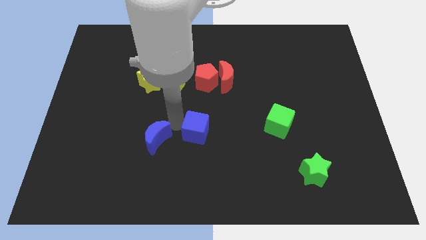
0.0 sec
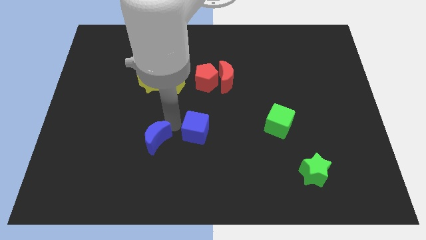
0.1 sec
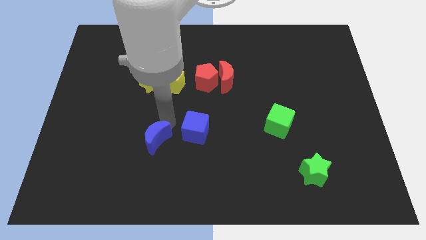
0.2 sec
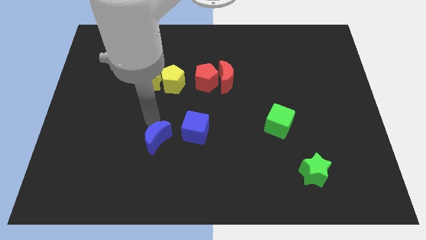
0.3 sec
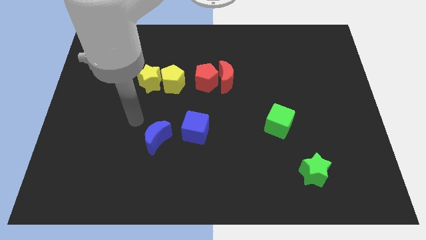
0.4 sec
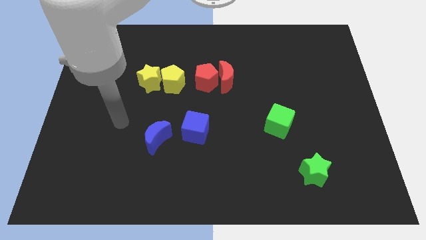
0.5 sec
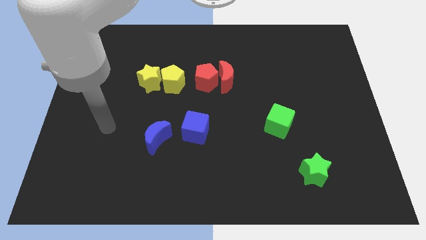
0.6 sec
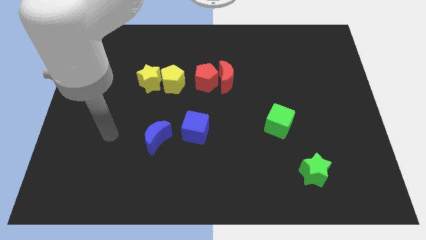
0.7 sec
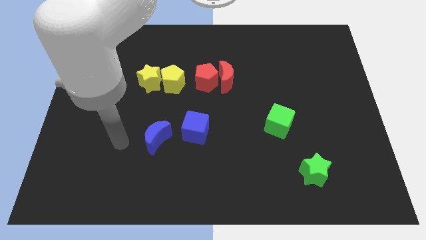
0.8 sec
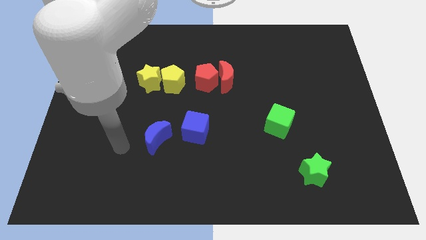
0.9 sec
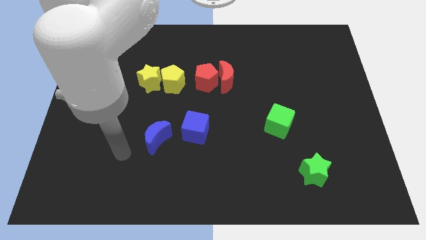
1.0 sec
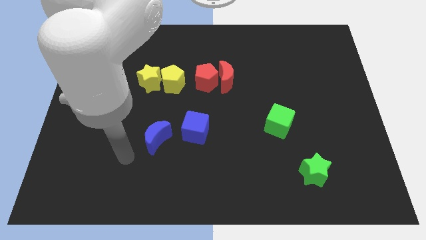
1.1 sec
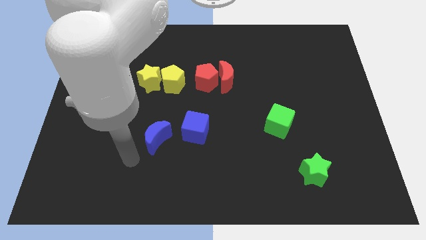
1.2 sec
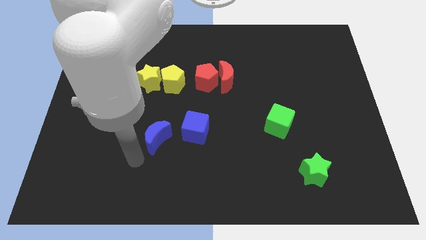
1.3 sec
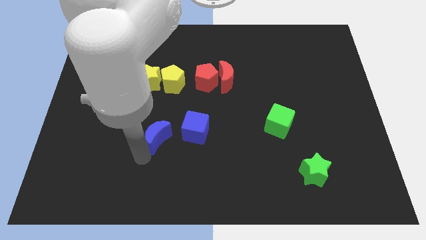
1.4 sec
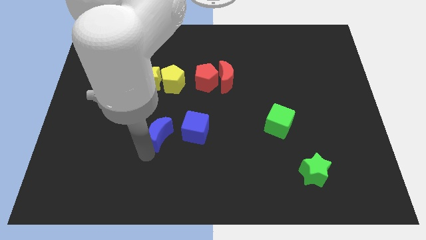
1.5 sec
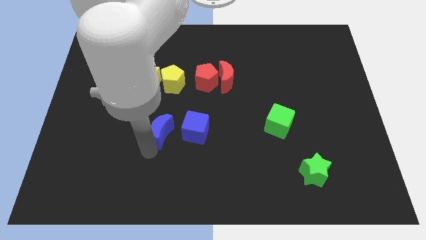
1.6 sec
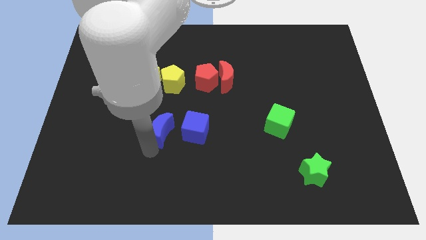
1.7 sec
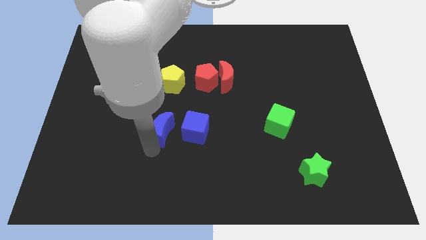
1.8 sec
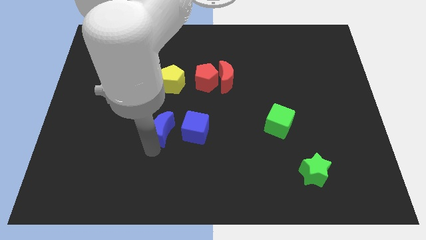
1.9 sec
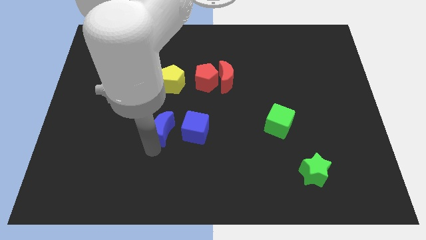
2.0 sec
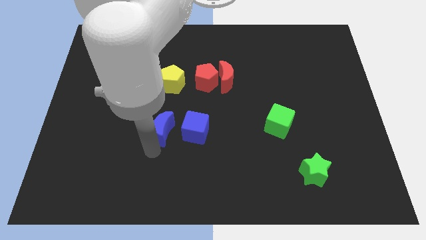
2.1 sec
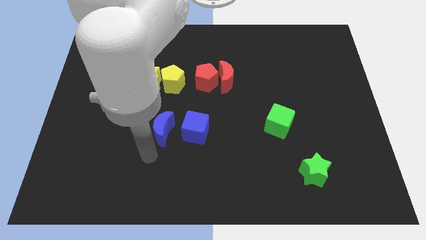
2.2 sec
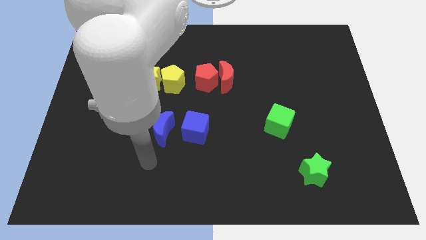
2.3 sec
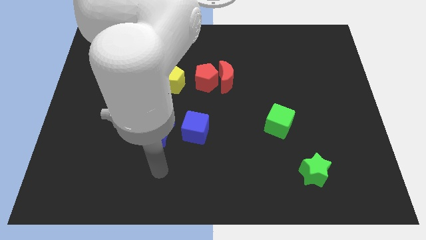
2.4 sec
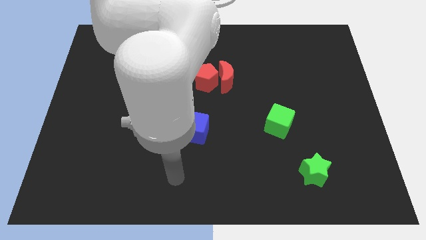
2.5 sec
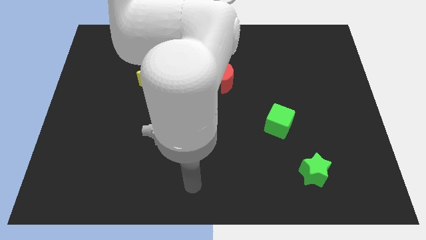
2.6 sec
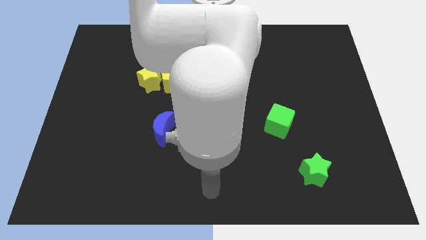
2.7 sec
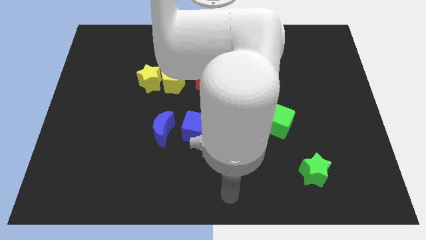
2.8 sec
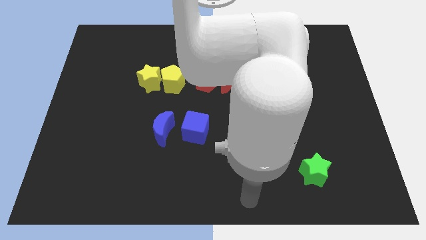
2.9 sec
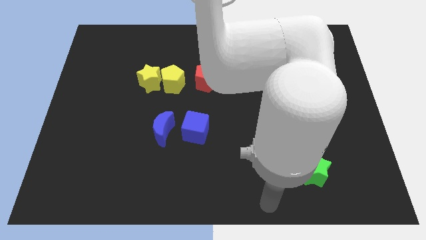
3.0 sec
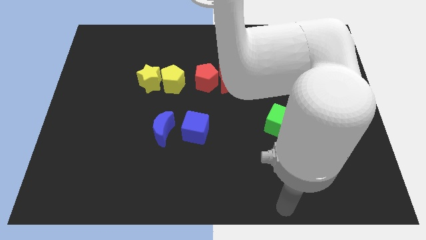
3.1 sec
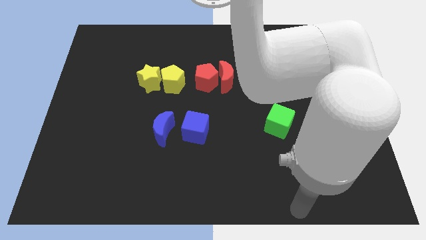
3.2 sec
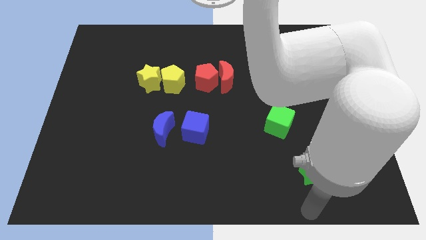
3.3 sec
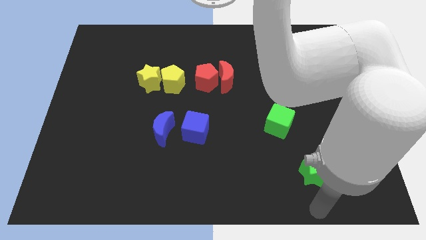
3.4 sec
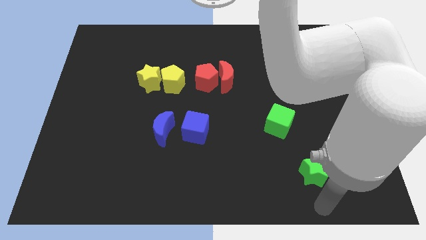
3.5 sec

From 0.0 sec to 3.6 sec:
slightly push the blue crescent towards the blue cube
